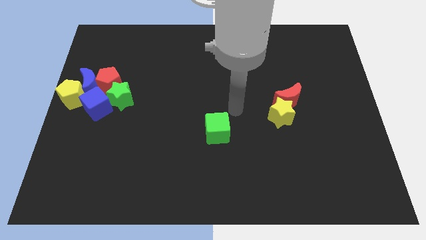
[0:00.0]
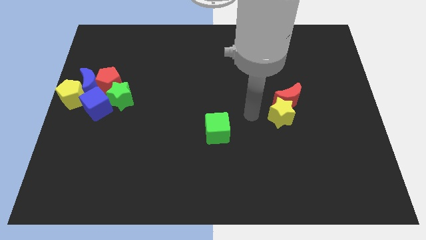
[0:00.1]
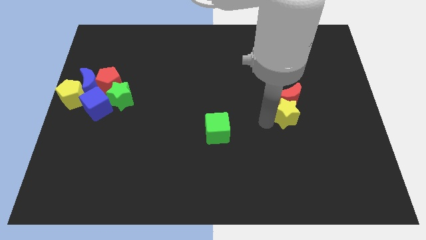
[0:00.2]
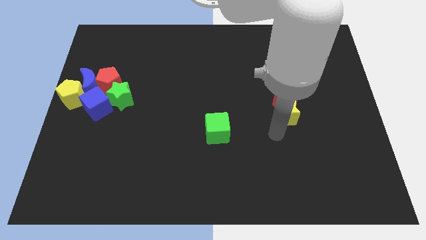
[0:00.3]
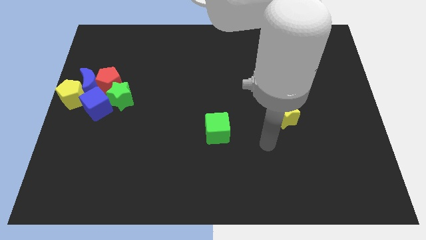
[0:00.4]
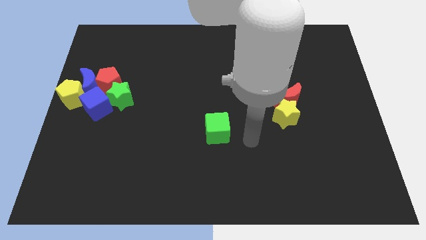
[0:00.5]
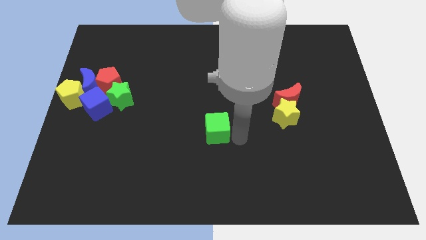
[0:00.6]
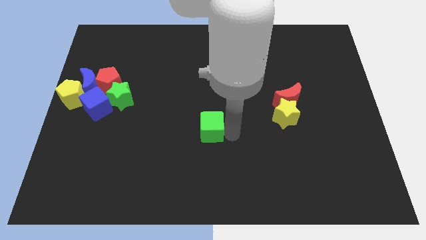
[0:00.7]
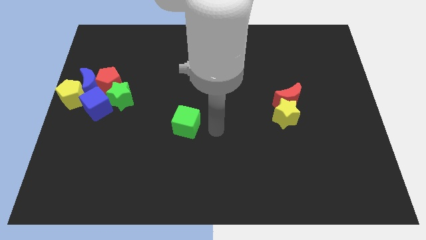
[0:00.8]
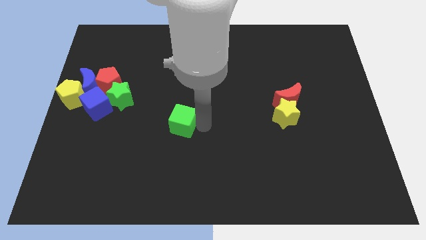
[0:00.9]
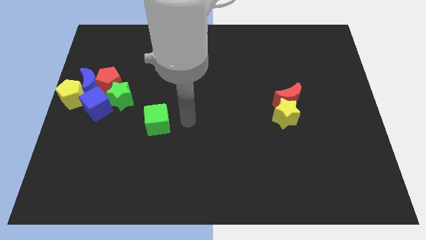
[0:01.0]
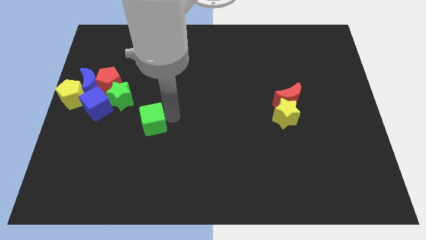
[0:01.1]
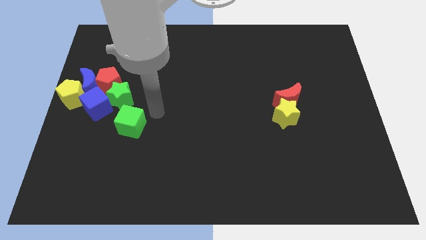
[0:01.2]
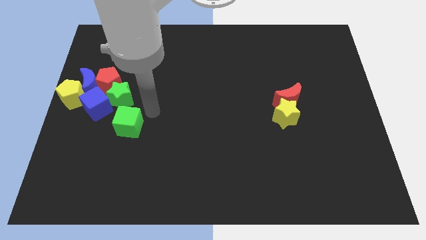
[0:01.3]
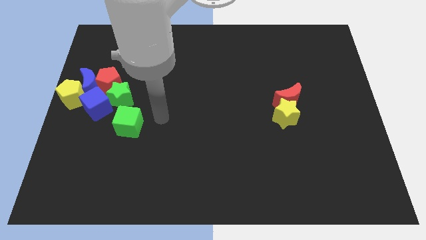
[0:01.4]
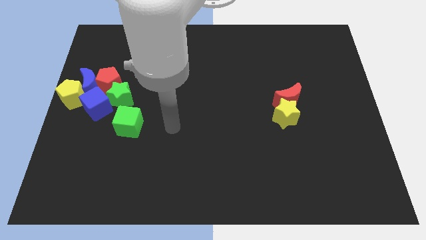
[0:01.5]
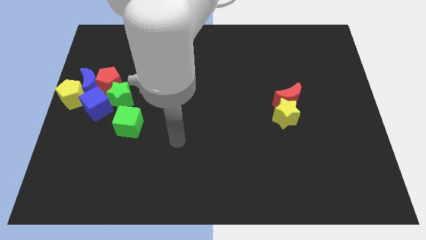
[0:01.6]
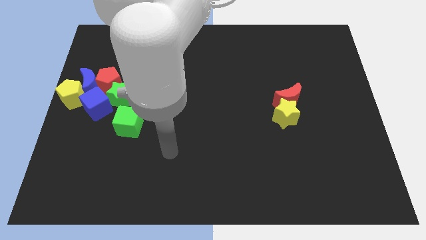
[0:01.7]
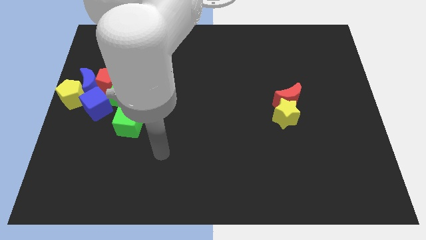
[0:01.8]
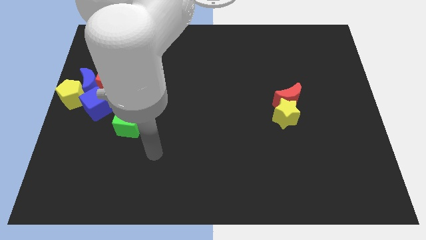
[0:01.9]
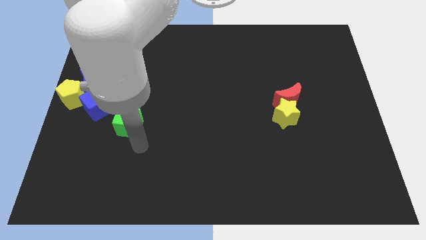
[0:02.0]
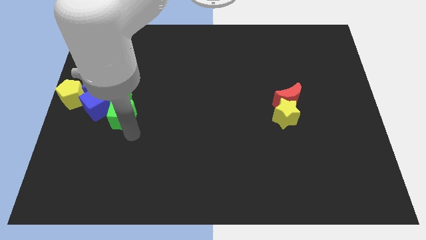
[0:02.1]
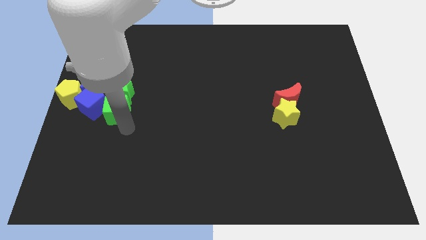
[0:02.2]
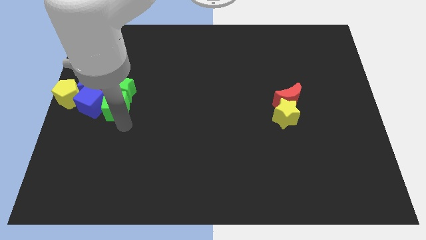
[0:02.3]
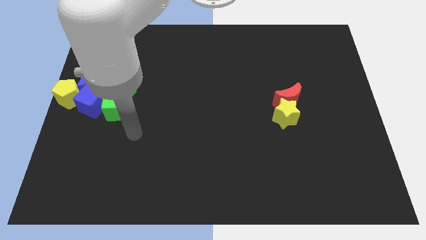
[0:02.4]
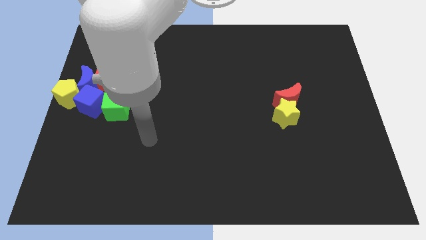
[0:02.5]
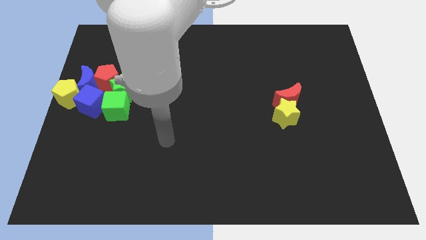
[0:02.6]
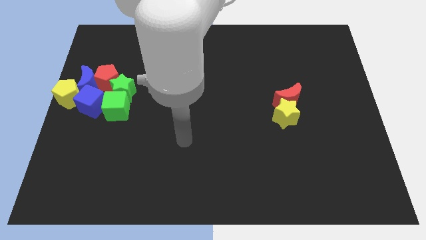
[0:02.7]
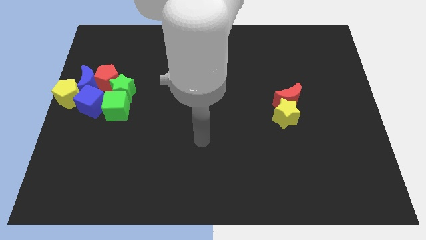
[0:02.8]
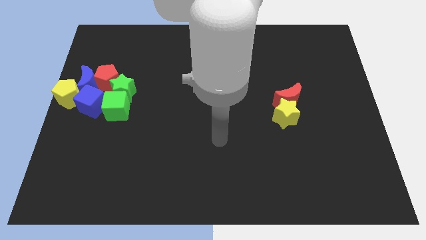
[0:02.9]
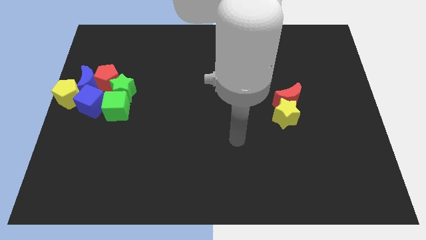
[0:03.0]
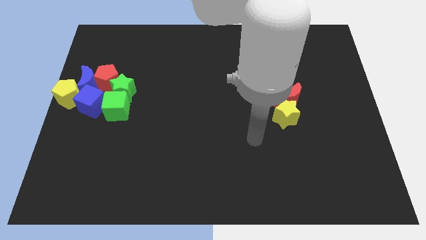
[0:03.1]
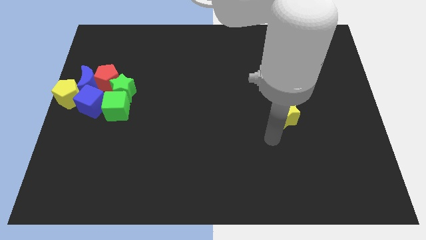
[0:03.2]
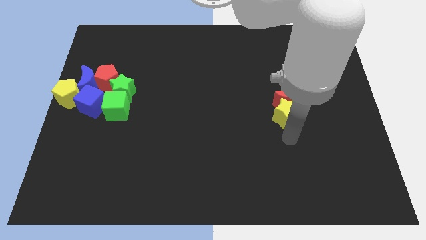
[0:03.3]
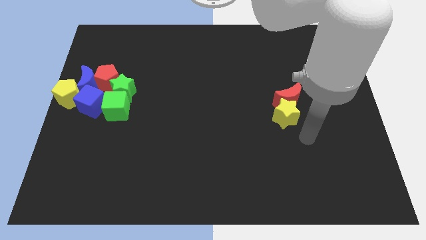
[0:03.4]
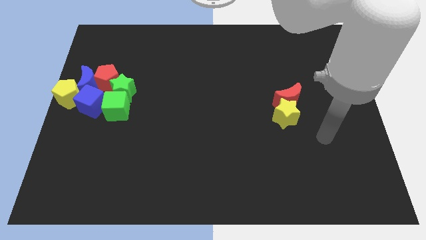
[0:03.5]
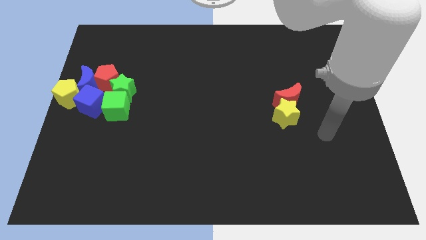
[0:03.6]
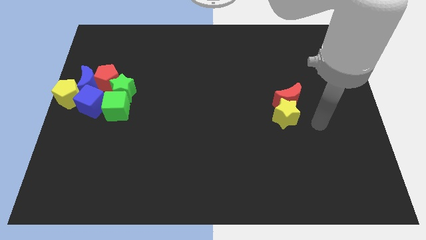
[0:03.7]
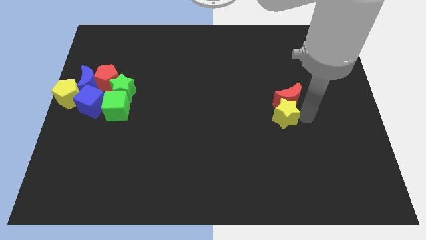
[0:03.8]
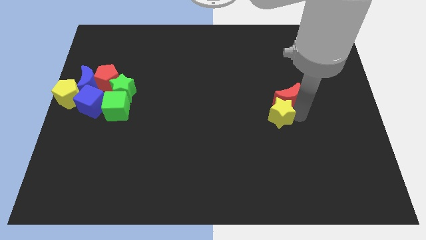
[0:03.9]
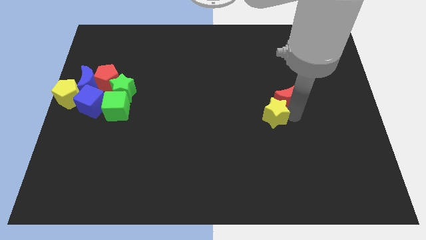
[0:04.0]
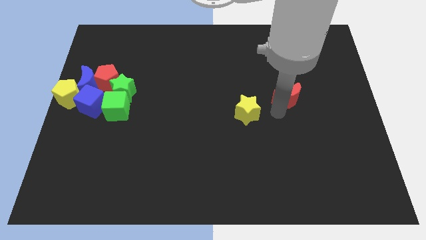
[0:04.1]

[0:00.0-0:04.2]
place the green cube to the bottom of the green star

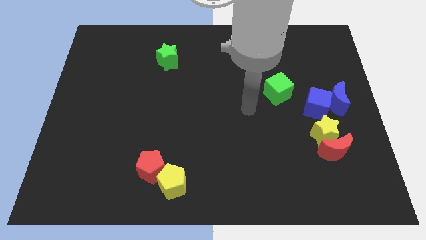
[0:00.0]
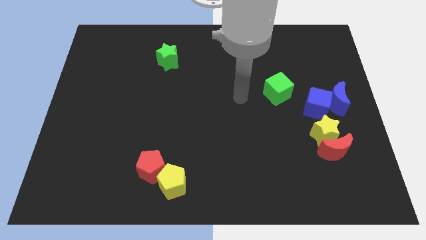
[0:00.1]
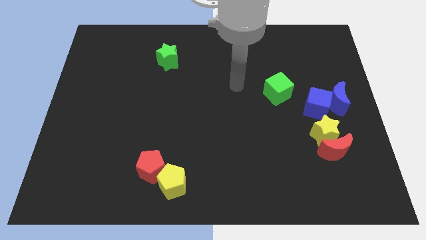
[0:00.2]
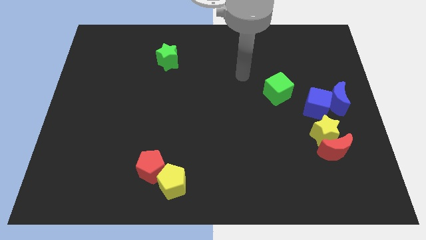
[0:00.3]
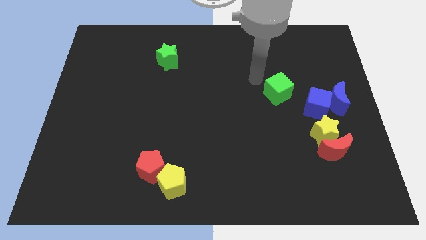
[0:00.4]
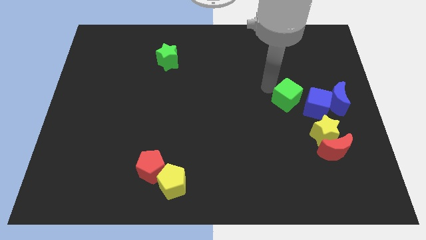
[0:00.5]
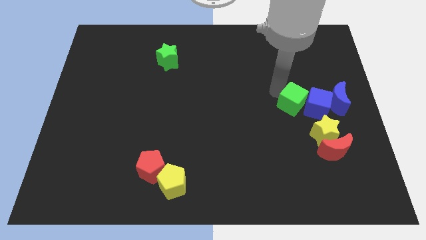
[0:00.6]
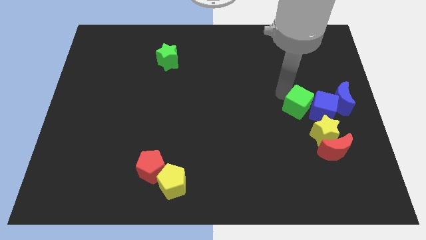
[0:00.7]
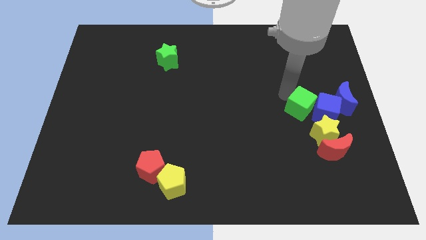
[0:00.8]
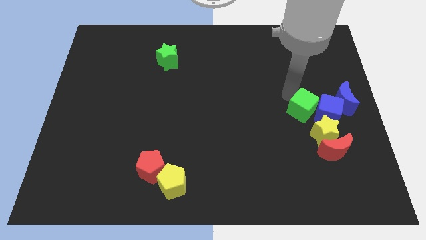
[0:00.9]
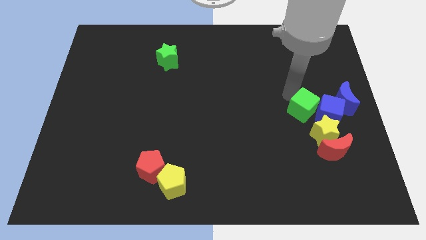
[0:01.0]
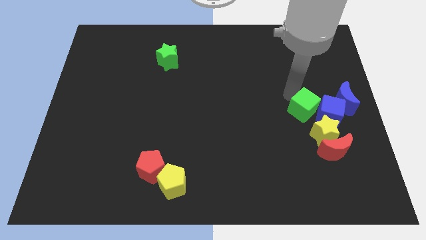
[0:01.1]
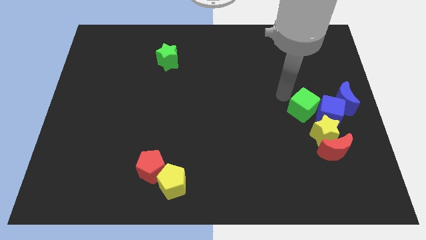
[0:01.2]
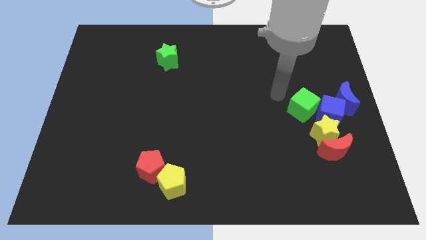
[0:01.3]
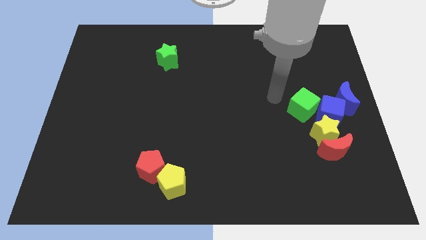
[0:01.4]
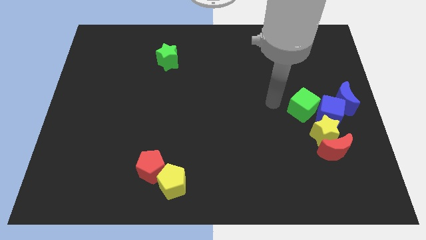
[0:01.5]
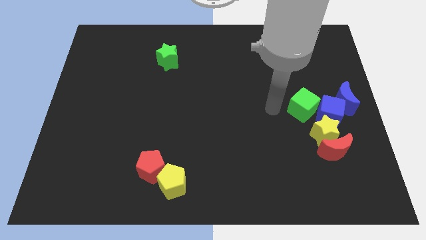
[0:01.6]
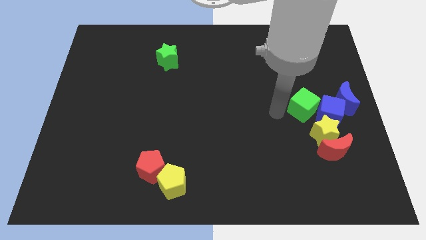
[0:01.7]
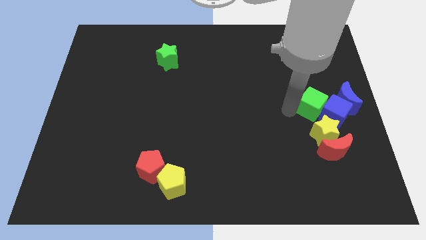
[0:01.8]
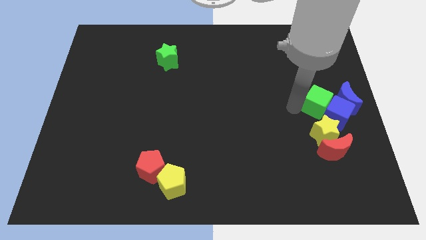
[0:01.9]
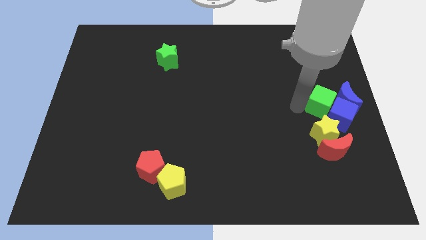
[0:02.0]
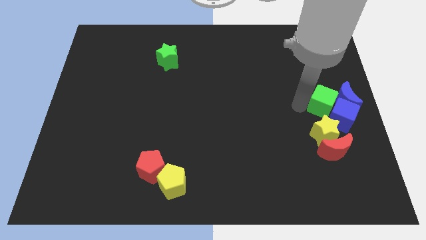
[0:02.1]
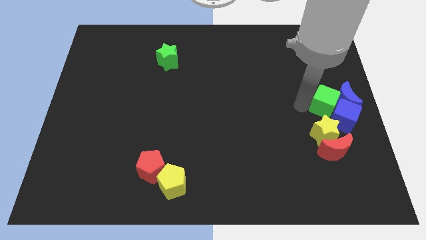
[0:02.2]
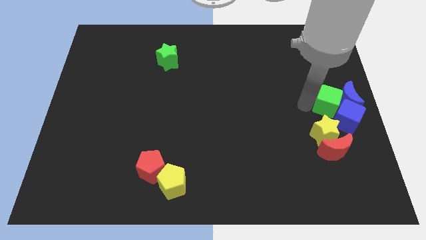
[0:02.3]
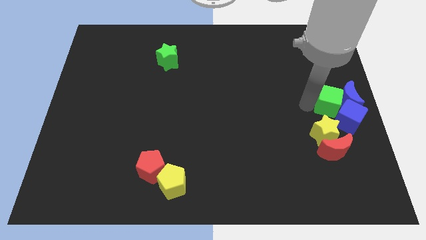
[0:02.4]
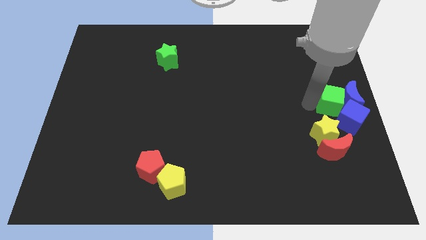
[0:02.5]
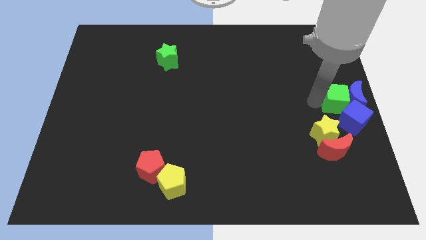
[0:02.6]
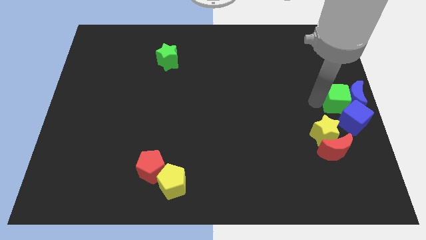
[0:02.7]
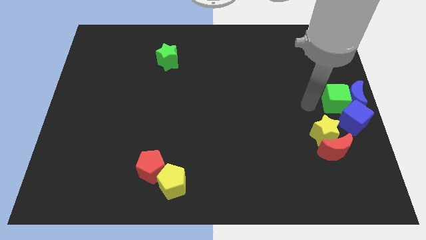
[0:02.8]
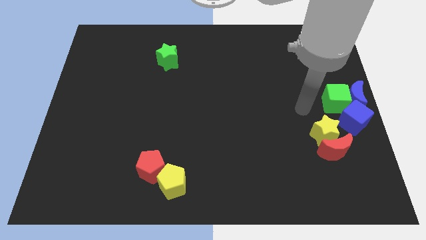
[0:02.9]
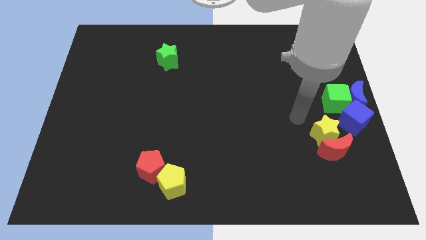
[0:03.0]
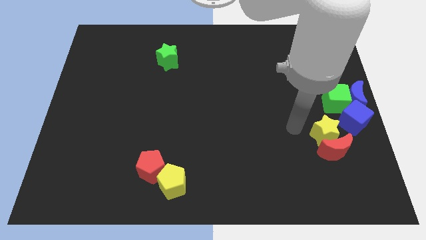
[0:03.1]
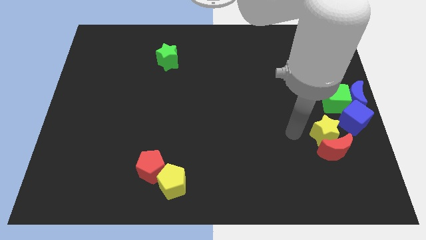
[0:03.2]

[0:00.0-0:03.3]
move green cube into group of blocks

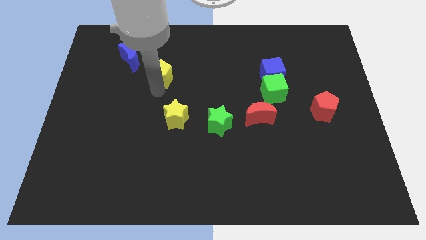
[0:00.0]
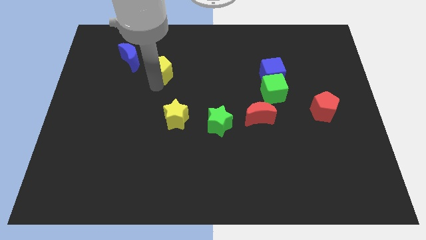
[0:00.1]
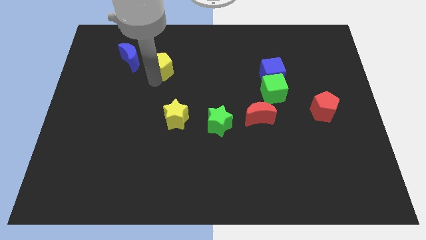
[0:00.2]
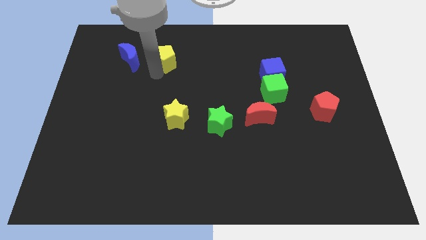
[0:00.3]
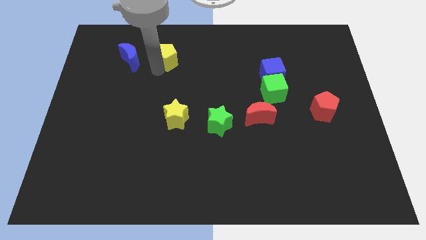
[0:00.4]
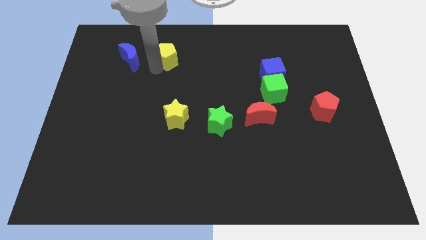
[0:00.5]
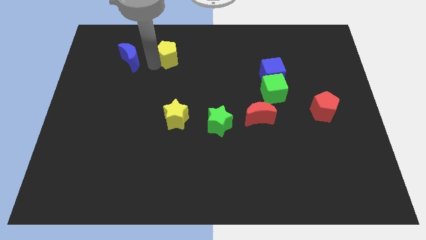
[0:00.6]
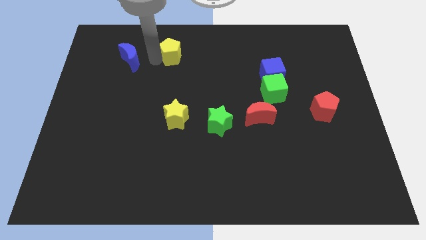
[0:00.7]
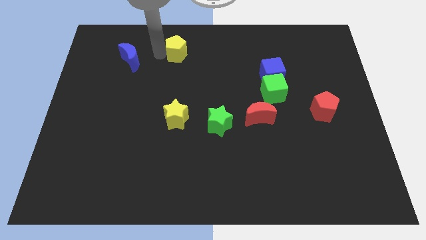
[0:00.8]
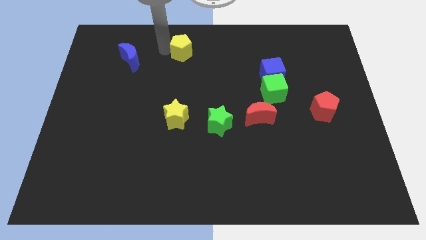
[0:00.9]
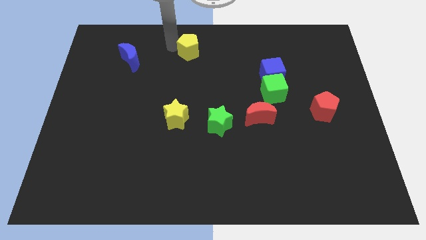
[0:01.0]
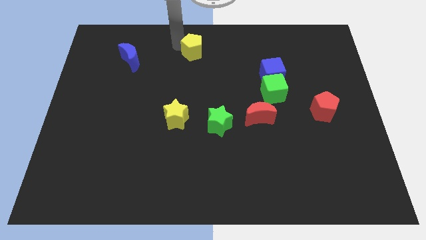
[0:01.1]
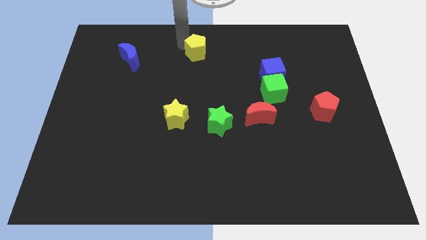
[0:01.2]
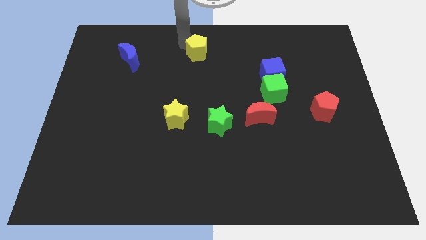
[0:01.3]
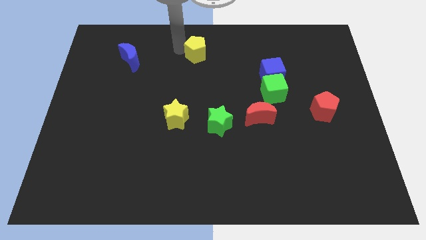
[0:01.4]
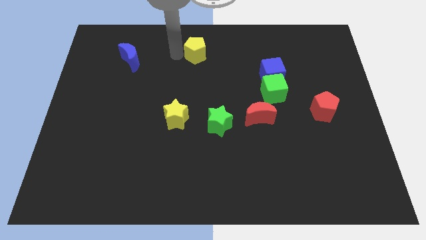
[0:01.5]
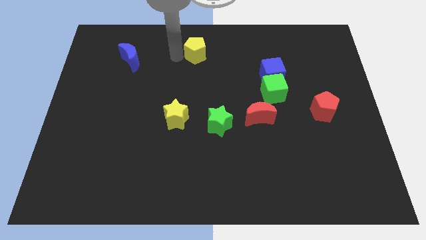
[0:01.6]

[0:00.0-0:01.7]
move the yellow pentagon towards the top center of the board
